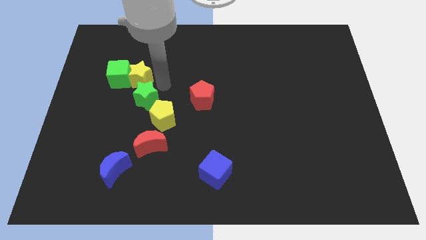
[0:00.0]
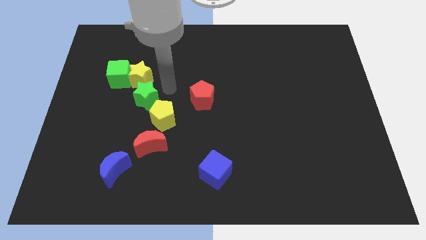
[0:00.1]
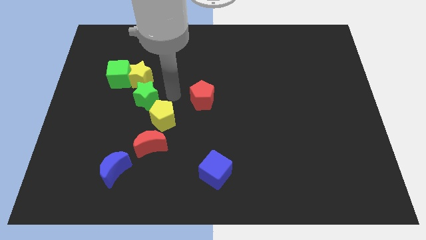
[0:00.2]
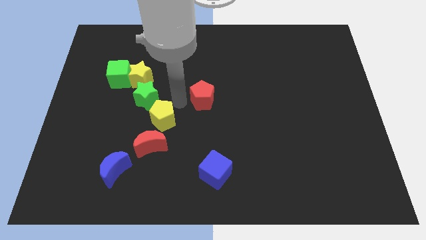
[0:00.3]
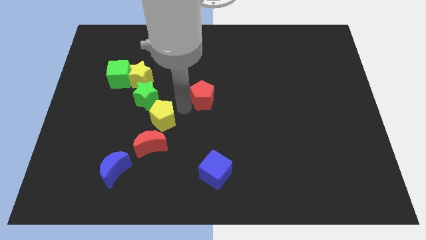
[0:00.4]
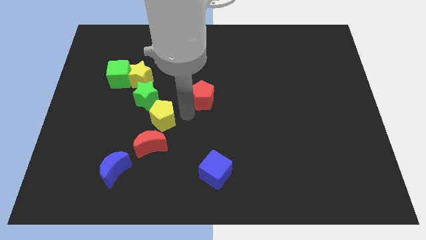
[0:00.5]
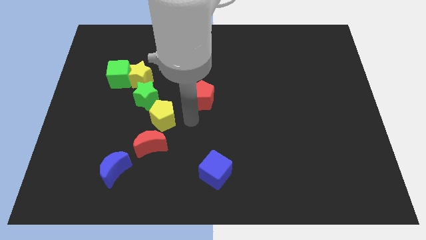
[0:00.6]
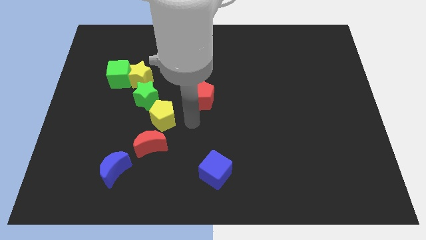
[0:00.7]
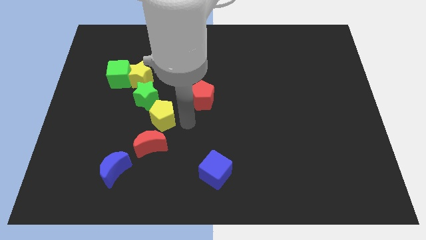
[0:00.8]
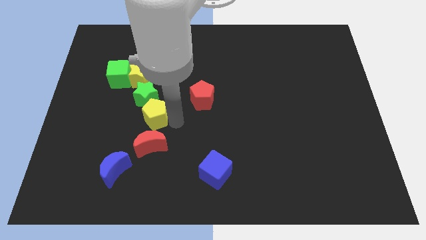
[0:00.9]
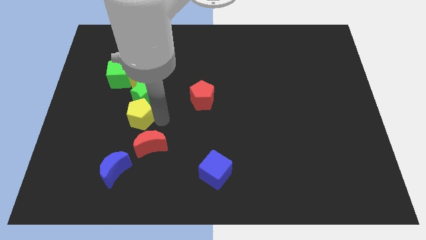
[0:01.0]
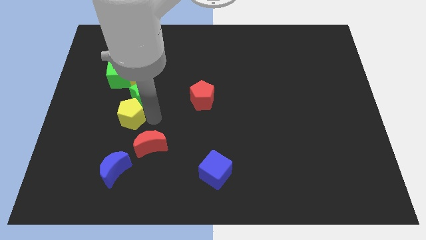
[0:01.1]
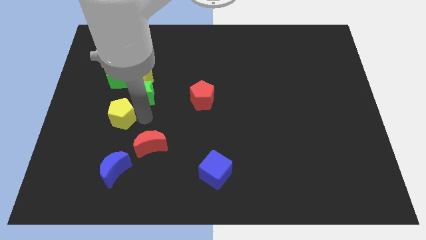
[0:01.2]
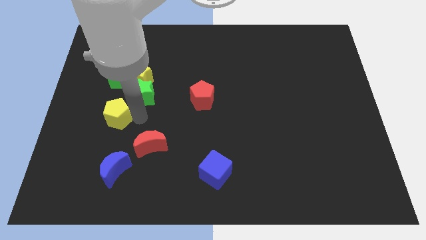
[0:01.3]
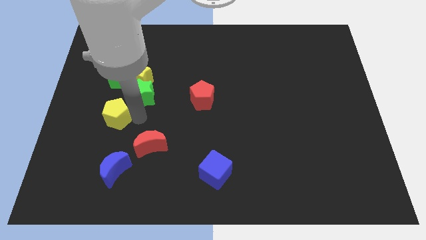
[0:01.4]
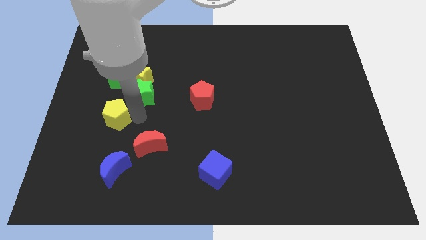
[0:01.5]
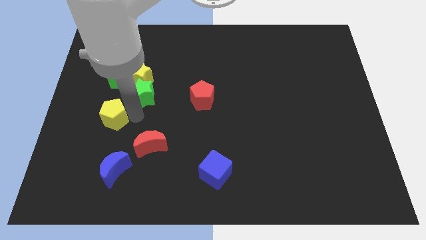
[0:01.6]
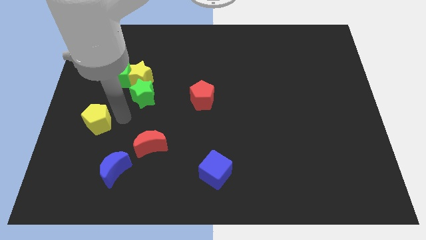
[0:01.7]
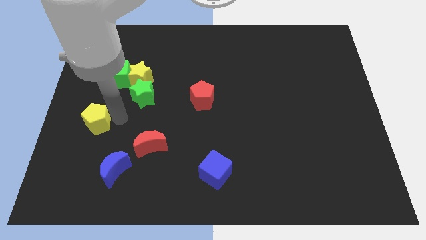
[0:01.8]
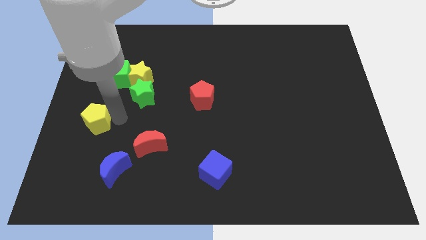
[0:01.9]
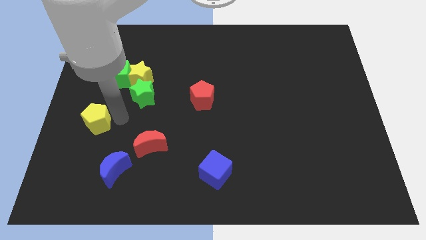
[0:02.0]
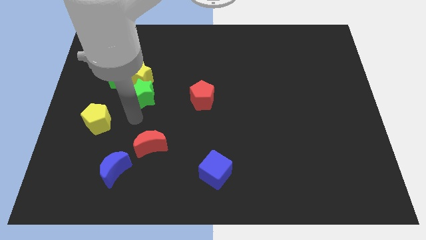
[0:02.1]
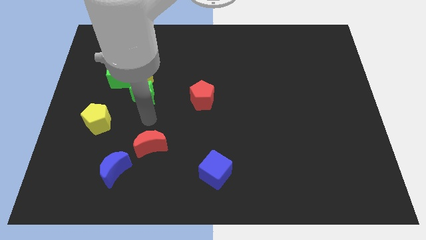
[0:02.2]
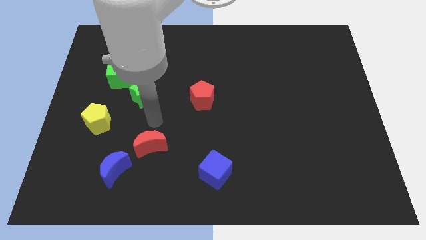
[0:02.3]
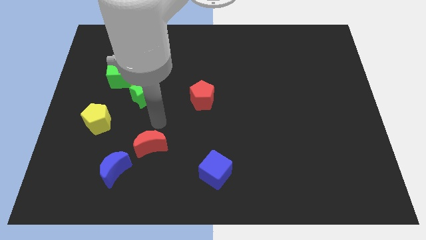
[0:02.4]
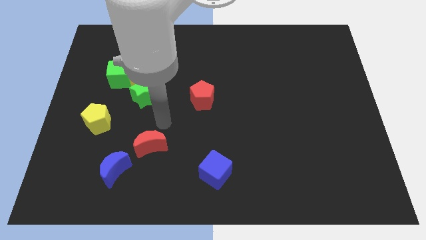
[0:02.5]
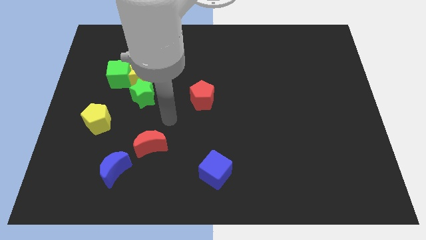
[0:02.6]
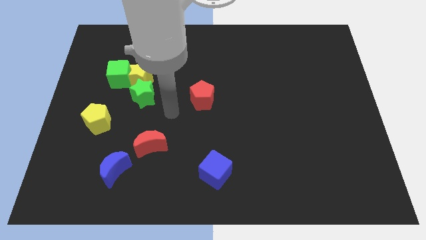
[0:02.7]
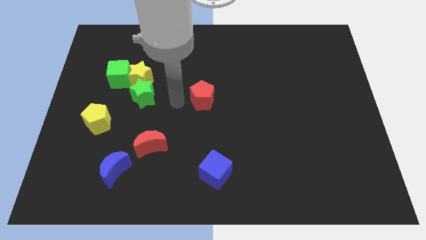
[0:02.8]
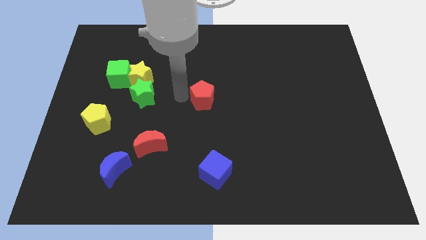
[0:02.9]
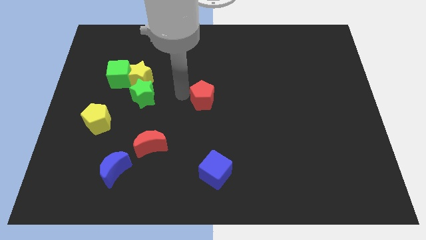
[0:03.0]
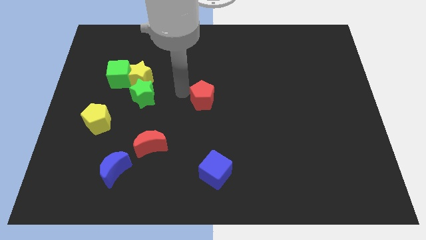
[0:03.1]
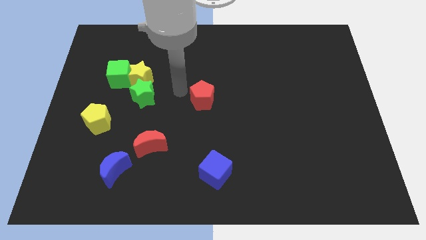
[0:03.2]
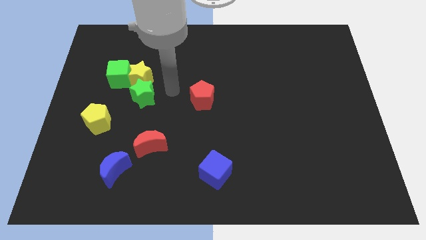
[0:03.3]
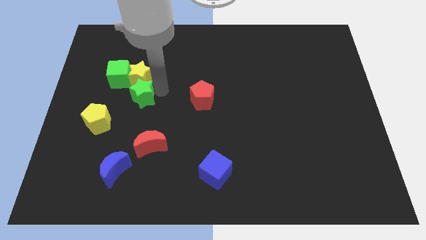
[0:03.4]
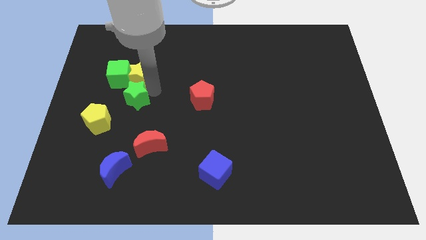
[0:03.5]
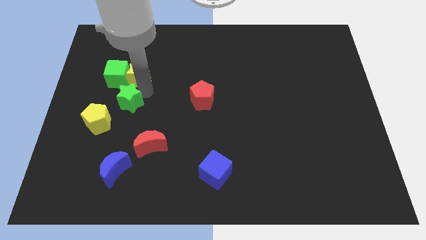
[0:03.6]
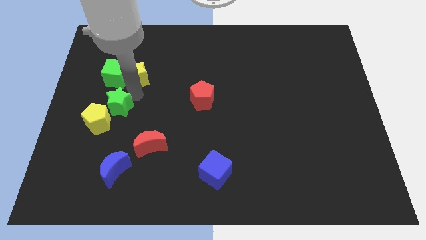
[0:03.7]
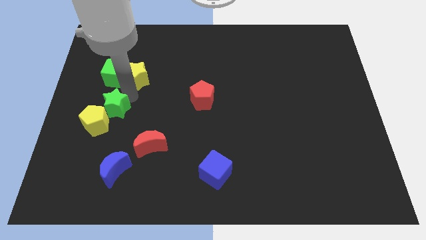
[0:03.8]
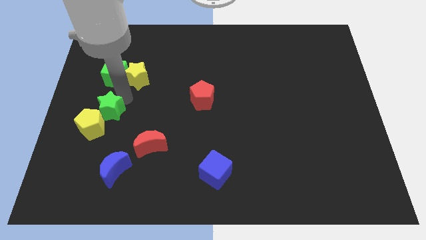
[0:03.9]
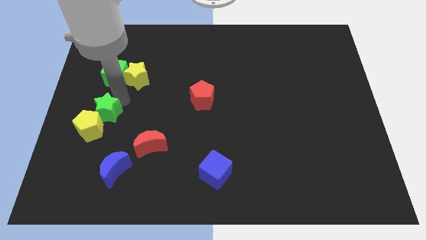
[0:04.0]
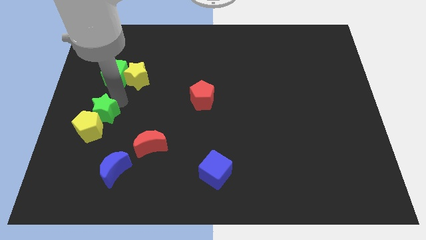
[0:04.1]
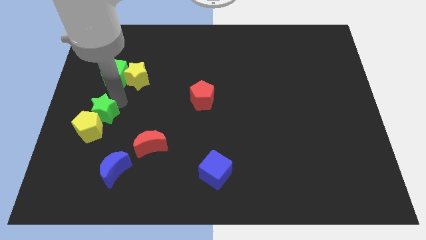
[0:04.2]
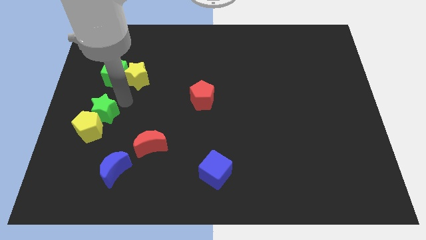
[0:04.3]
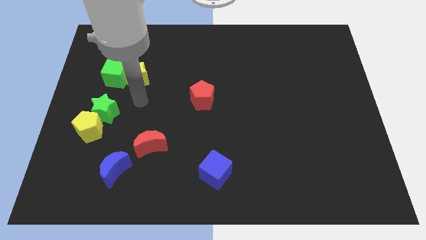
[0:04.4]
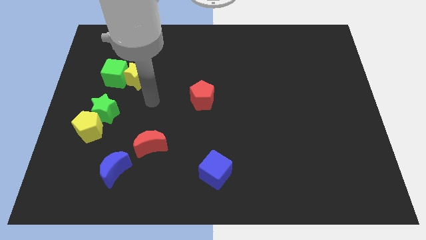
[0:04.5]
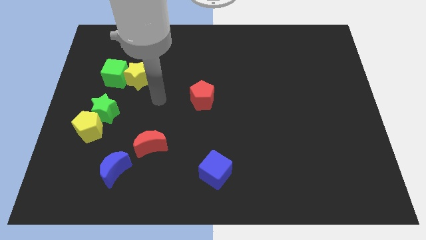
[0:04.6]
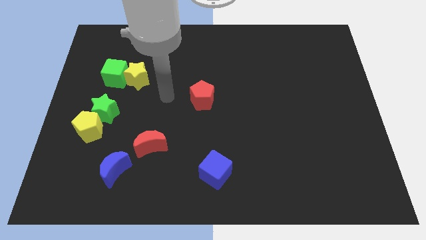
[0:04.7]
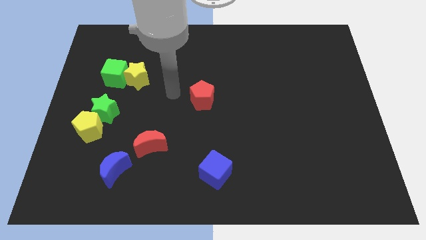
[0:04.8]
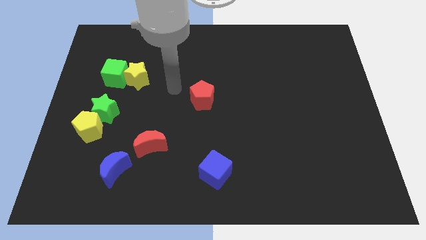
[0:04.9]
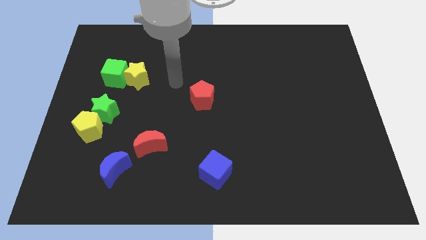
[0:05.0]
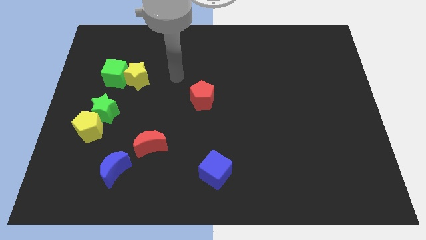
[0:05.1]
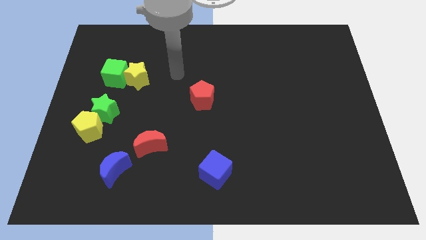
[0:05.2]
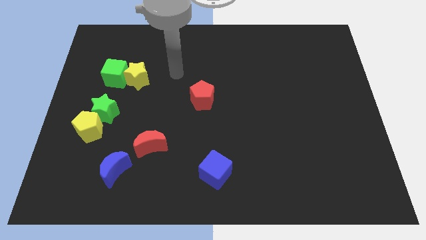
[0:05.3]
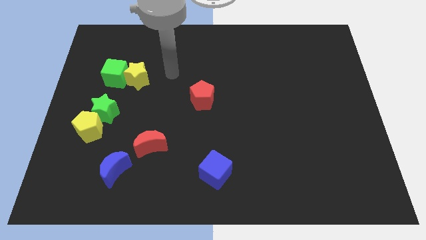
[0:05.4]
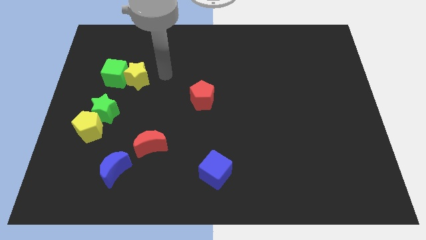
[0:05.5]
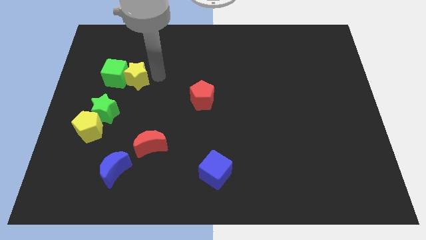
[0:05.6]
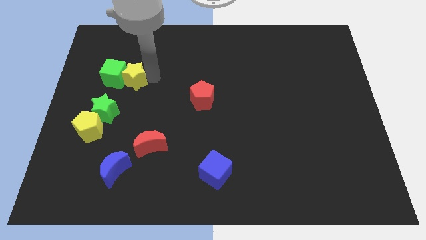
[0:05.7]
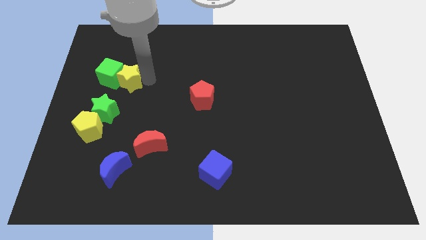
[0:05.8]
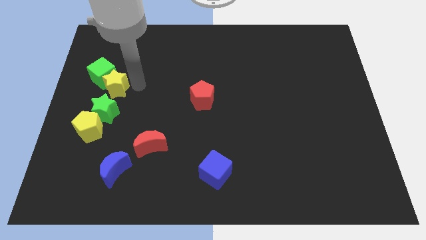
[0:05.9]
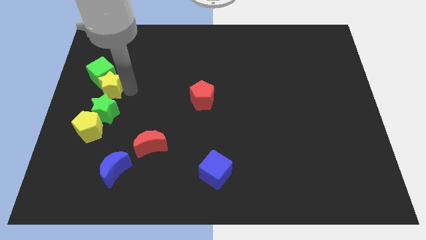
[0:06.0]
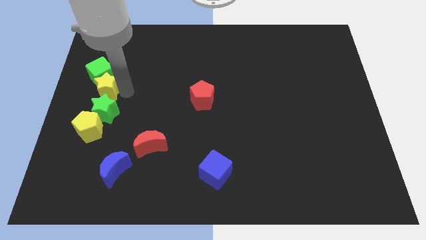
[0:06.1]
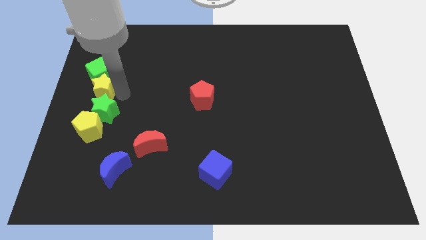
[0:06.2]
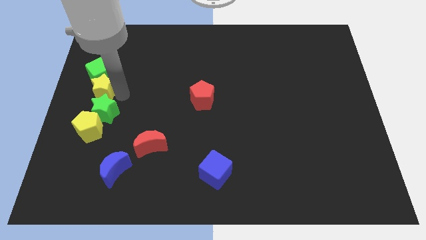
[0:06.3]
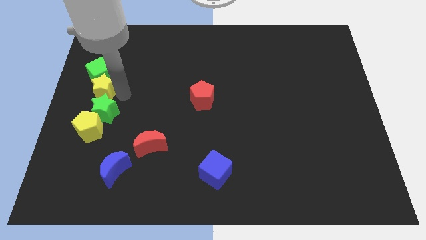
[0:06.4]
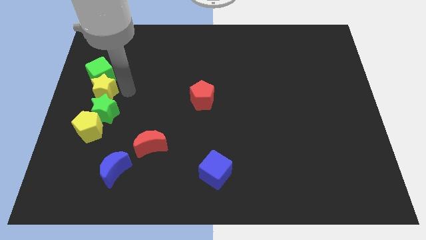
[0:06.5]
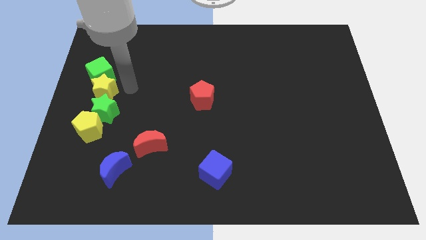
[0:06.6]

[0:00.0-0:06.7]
place two yellow blocks and two green blocks in a line

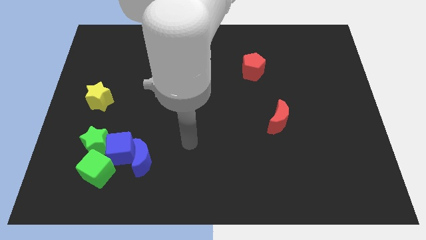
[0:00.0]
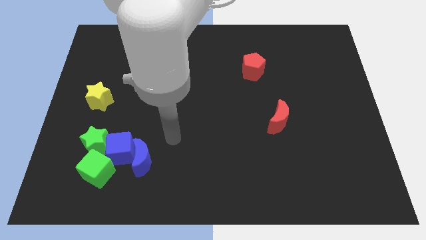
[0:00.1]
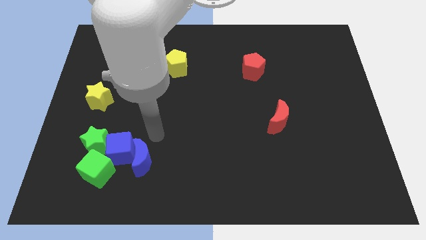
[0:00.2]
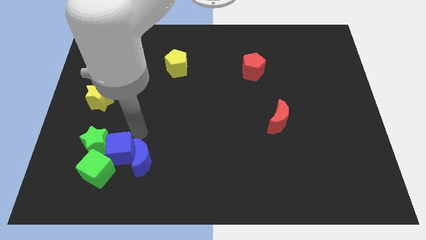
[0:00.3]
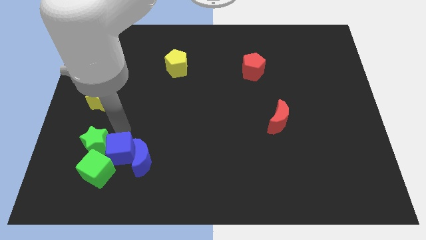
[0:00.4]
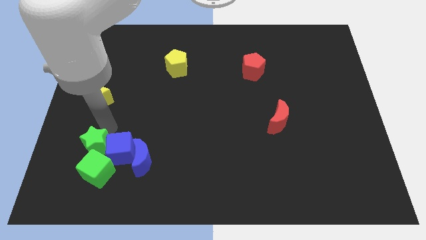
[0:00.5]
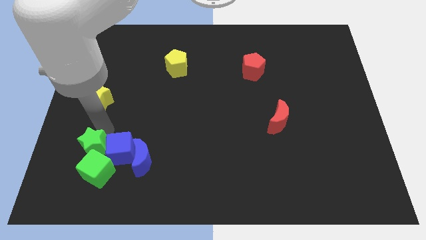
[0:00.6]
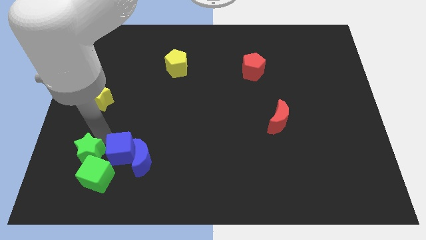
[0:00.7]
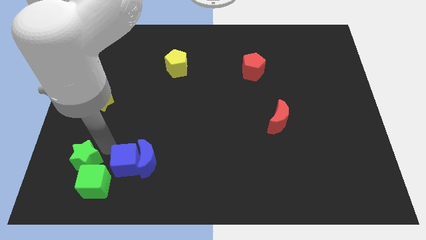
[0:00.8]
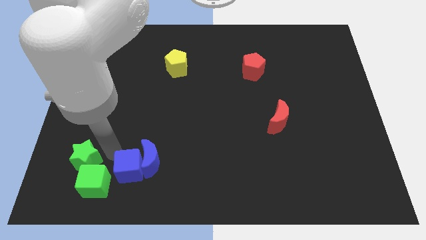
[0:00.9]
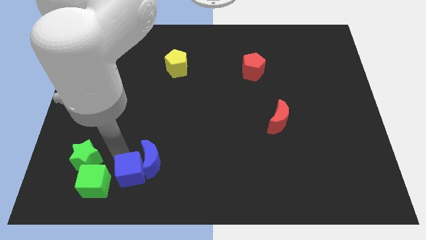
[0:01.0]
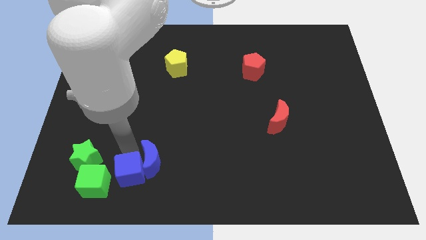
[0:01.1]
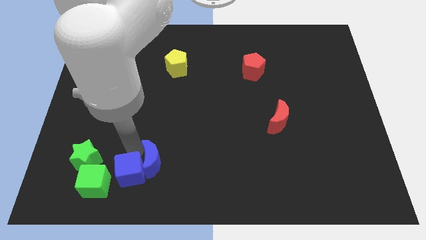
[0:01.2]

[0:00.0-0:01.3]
separate green and the blue blocks

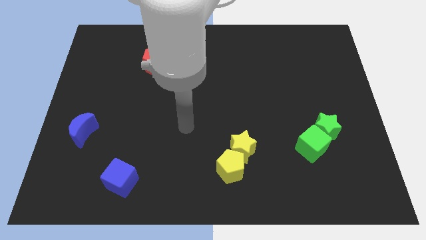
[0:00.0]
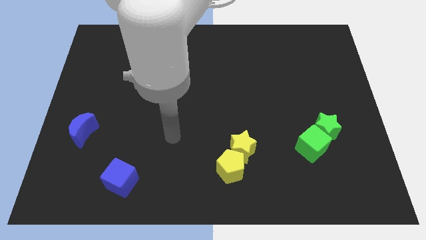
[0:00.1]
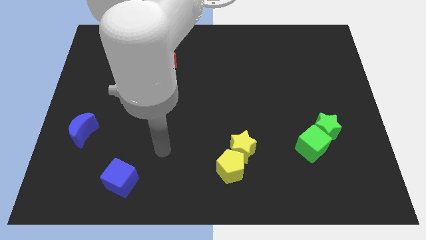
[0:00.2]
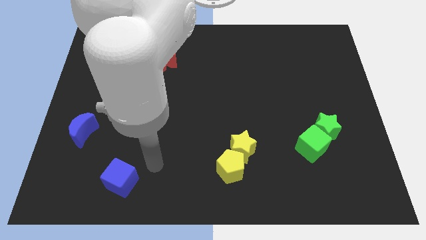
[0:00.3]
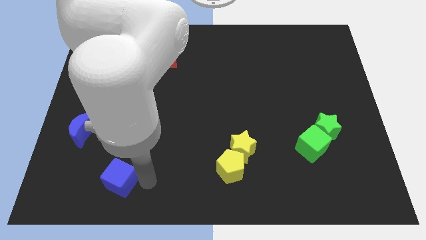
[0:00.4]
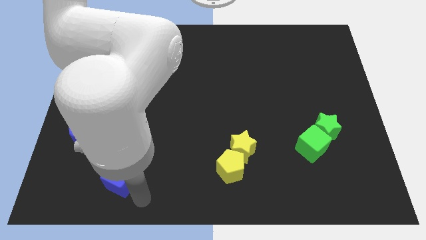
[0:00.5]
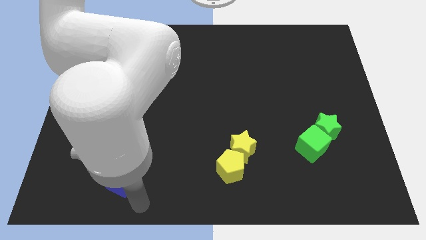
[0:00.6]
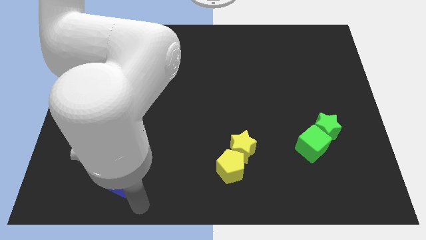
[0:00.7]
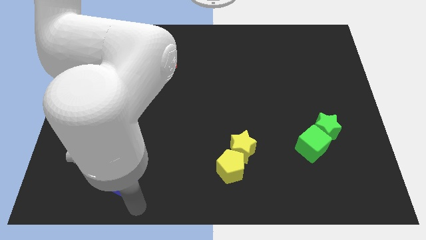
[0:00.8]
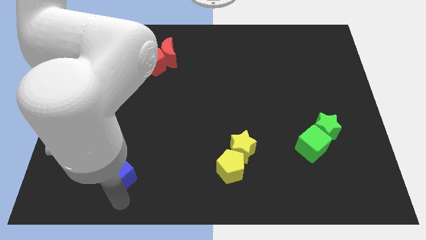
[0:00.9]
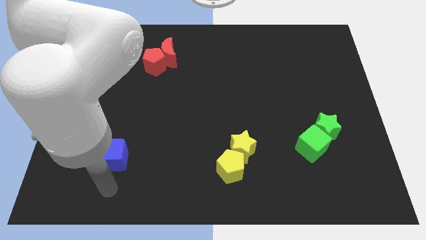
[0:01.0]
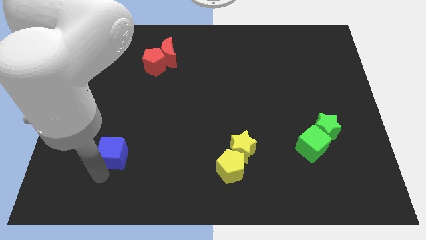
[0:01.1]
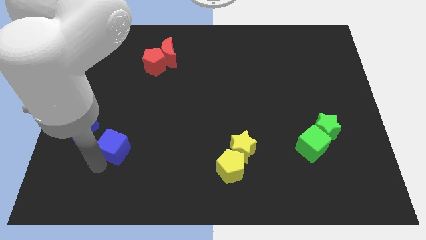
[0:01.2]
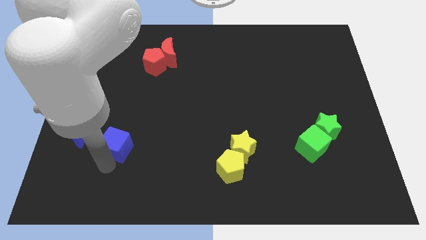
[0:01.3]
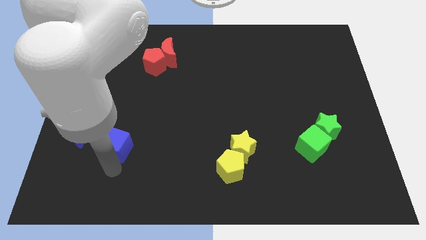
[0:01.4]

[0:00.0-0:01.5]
drag the blue cube slightly to the top side of the board
